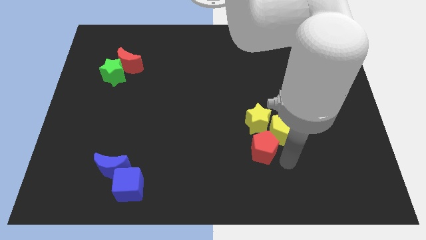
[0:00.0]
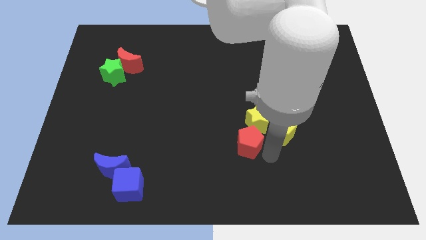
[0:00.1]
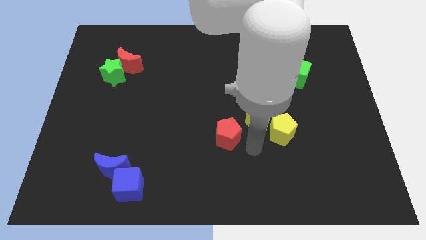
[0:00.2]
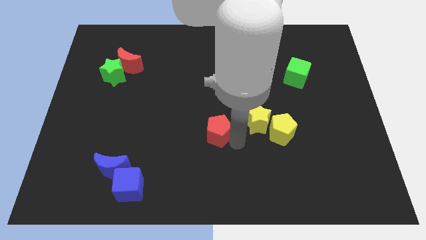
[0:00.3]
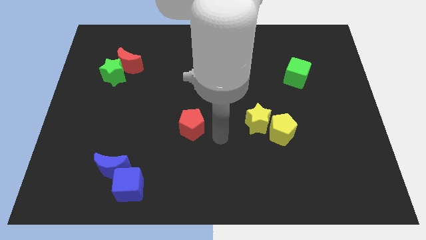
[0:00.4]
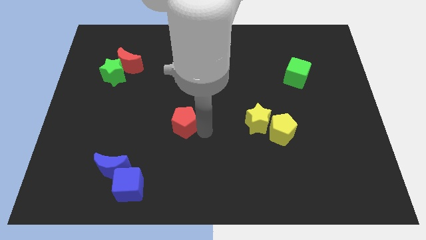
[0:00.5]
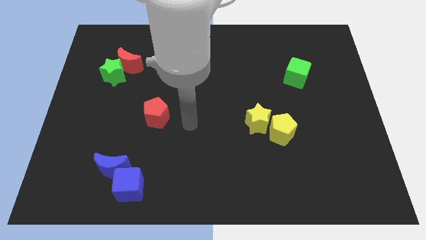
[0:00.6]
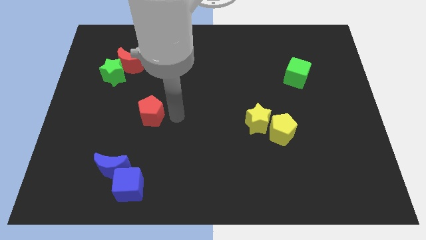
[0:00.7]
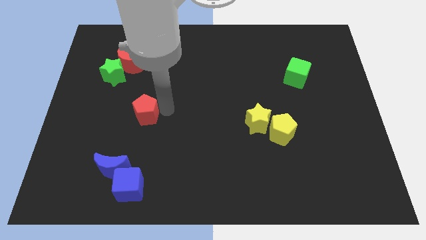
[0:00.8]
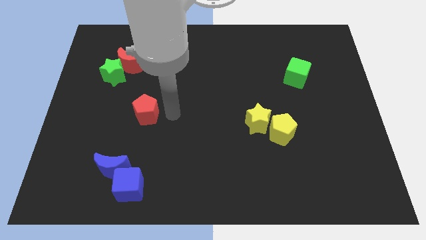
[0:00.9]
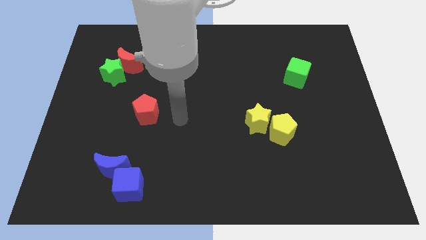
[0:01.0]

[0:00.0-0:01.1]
push the red pentagon towards the left side of the board

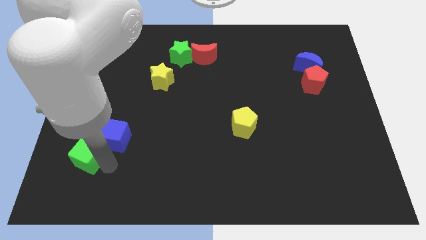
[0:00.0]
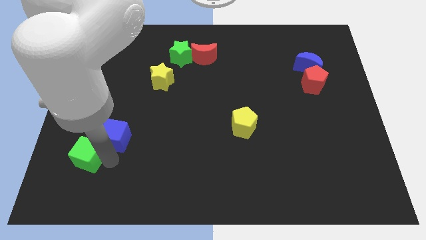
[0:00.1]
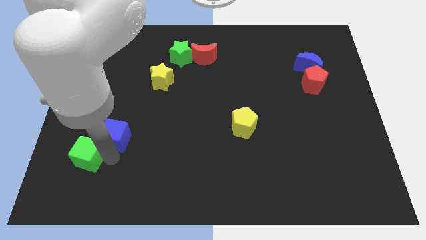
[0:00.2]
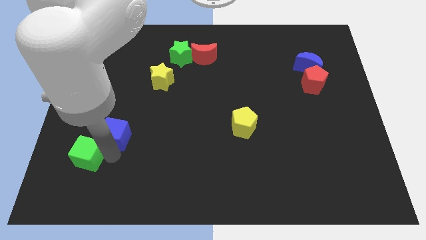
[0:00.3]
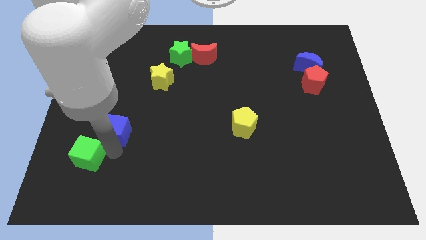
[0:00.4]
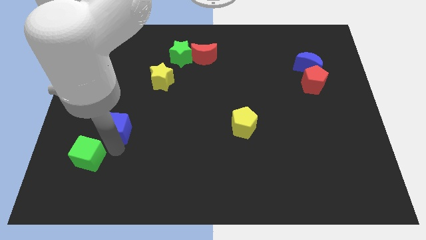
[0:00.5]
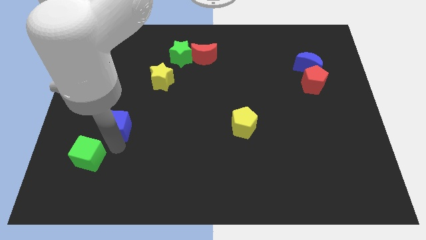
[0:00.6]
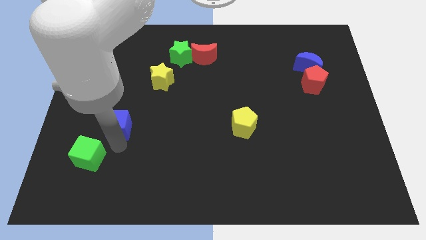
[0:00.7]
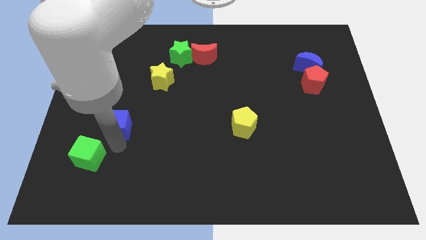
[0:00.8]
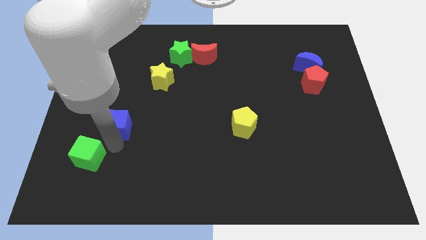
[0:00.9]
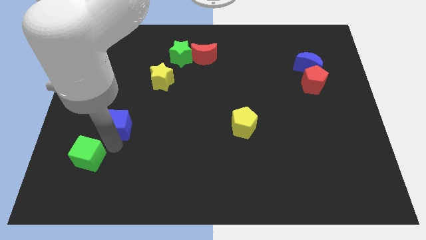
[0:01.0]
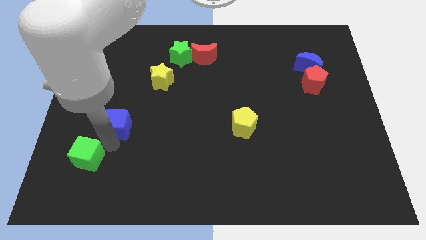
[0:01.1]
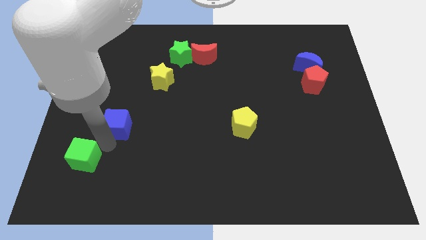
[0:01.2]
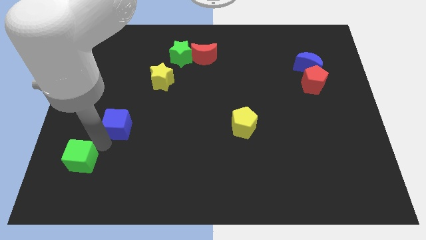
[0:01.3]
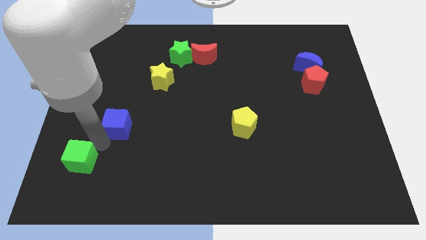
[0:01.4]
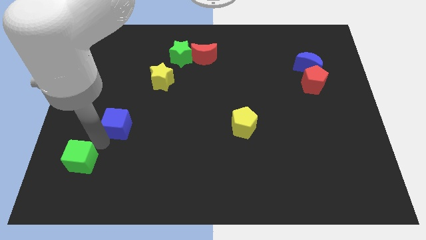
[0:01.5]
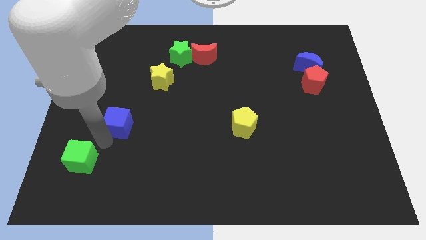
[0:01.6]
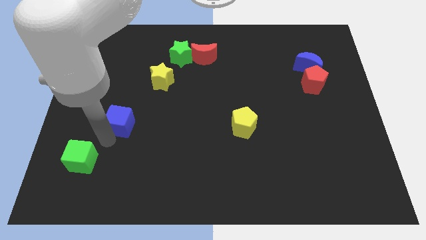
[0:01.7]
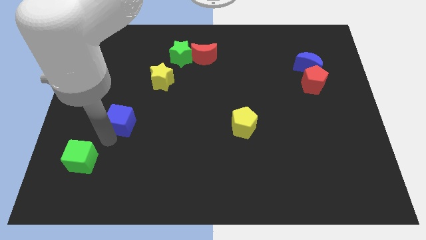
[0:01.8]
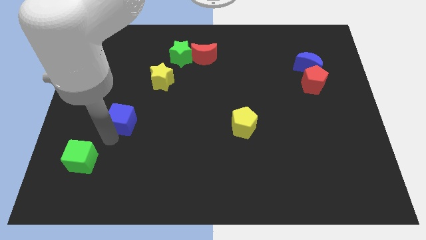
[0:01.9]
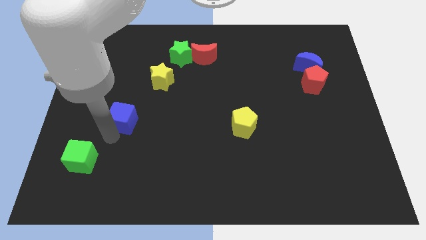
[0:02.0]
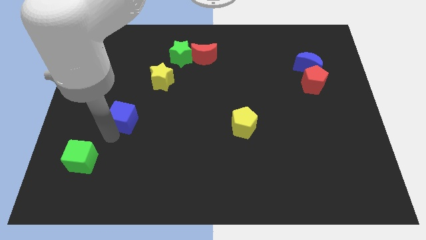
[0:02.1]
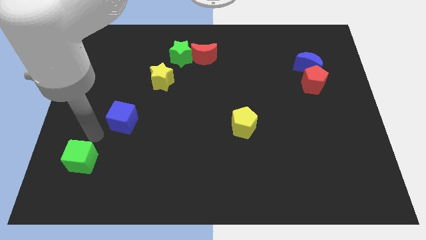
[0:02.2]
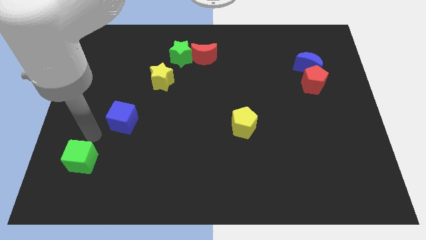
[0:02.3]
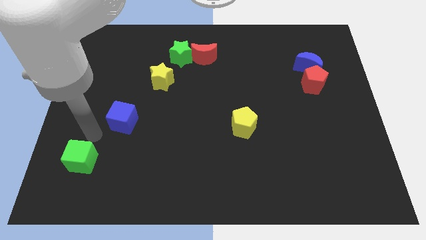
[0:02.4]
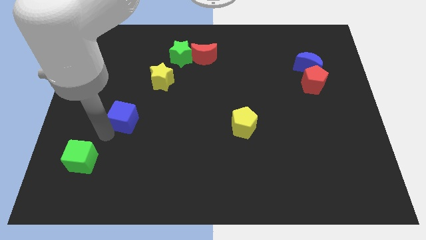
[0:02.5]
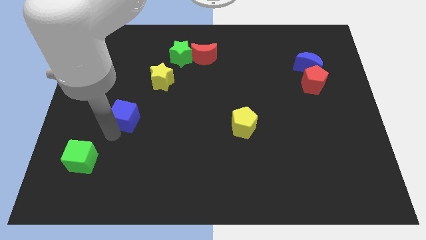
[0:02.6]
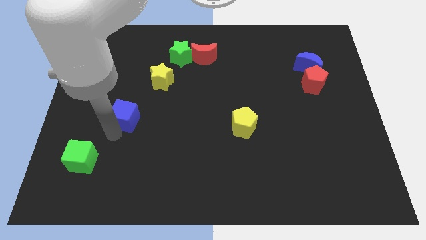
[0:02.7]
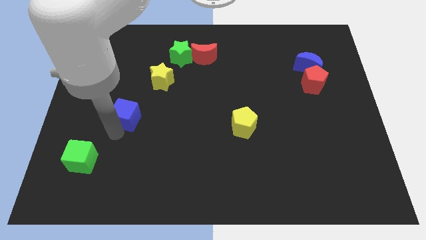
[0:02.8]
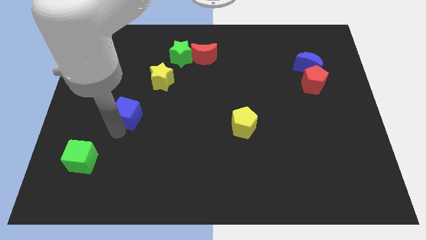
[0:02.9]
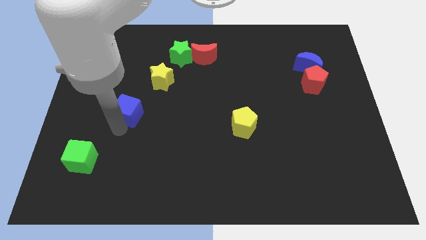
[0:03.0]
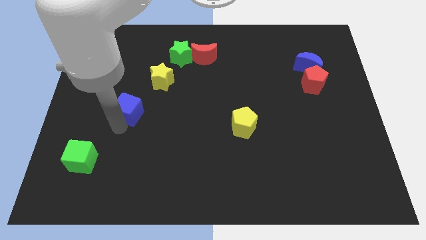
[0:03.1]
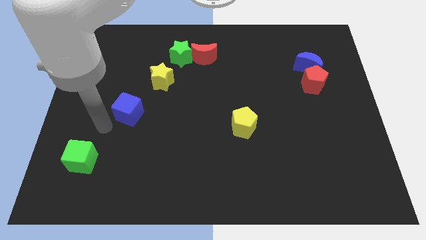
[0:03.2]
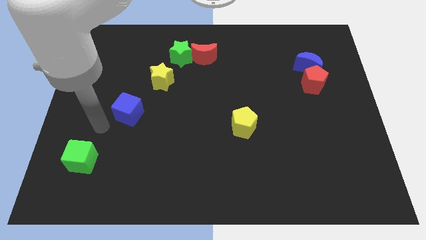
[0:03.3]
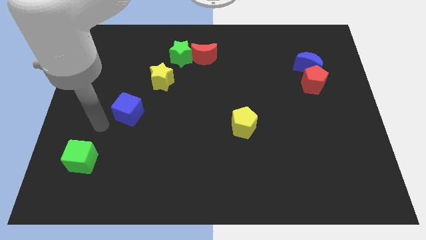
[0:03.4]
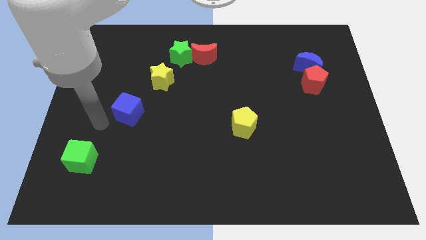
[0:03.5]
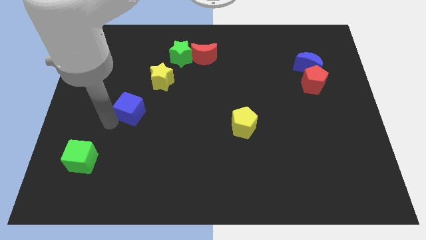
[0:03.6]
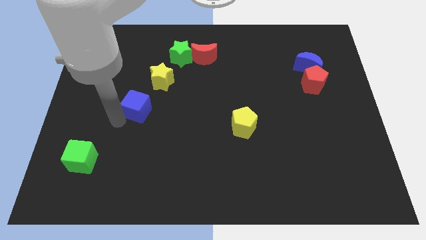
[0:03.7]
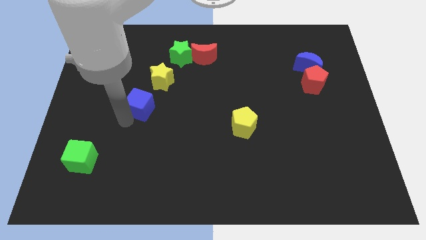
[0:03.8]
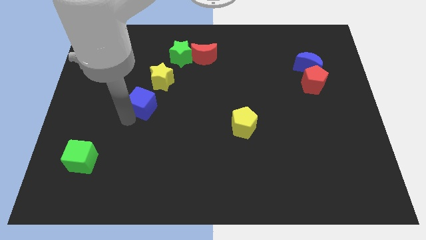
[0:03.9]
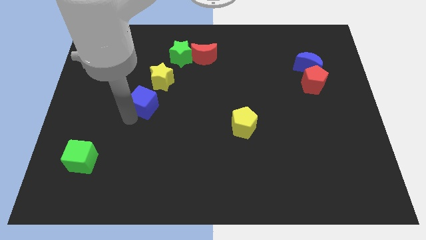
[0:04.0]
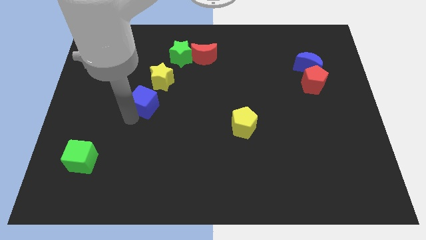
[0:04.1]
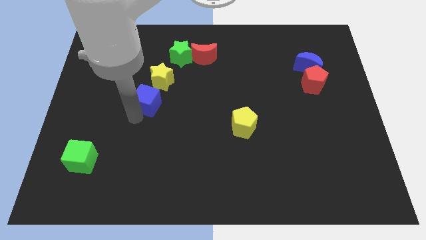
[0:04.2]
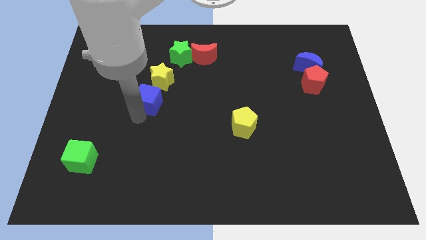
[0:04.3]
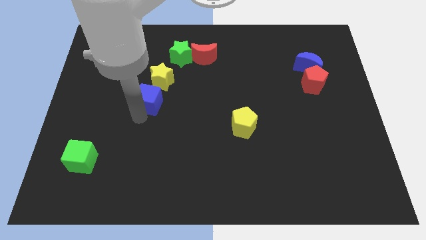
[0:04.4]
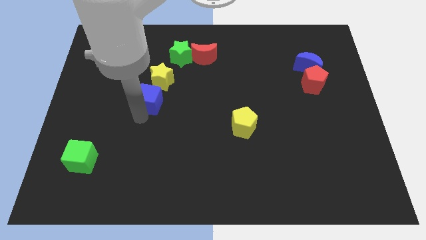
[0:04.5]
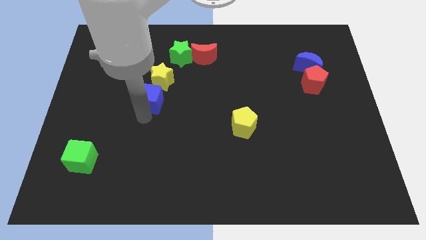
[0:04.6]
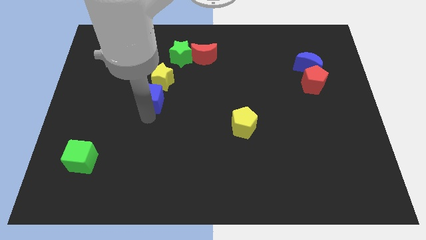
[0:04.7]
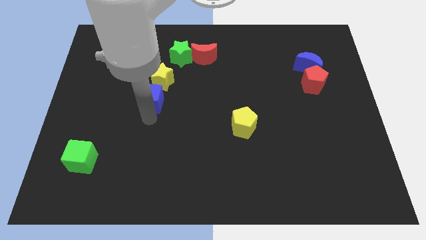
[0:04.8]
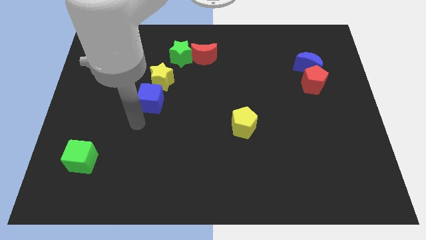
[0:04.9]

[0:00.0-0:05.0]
push the blue cube below the yellow star

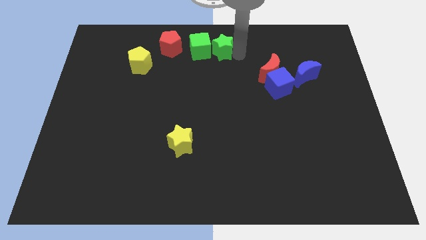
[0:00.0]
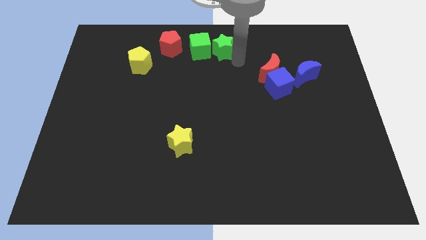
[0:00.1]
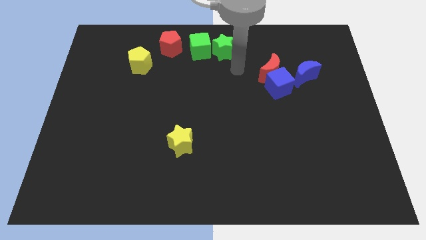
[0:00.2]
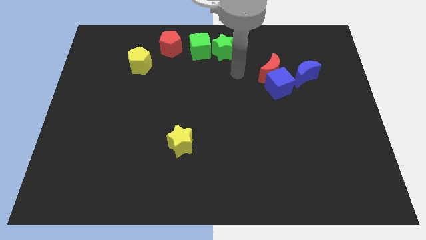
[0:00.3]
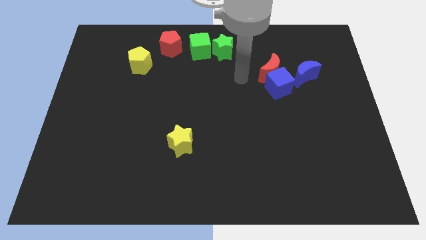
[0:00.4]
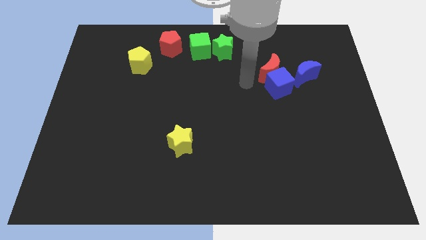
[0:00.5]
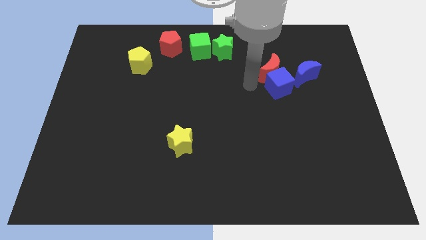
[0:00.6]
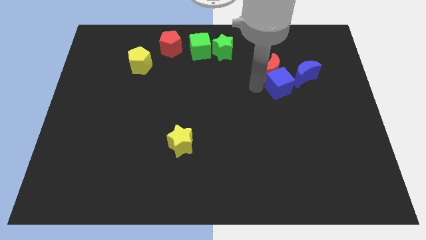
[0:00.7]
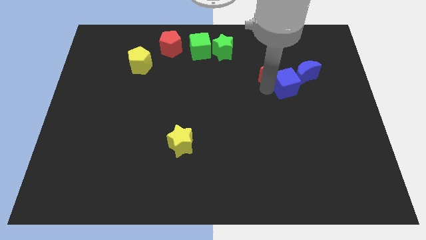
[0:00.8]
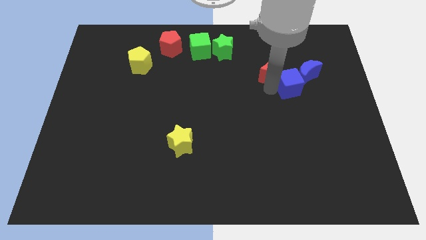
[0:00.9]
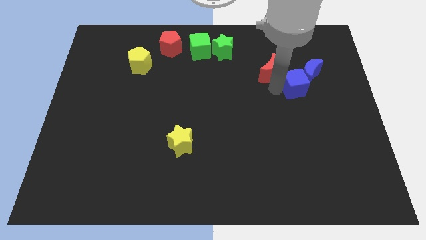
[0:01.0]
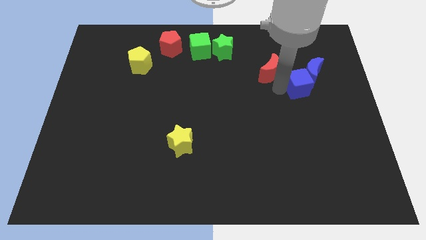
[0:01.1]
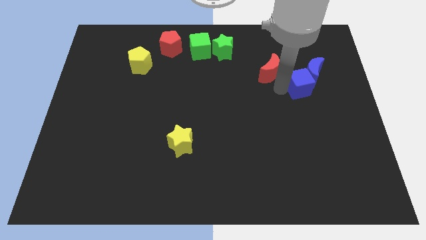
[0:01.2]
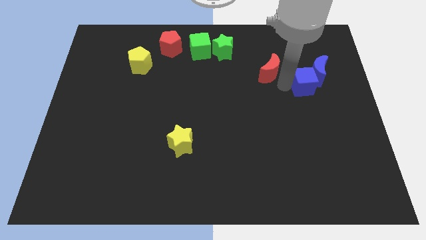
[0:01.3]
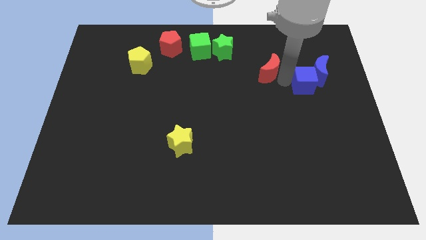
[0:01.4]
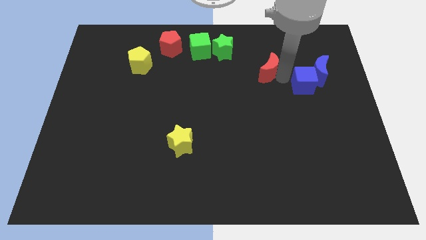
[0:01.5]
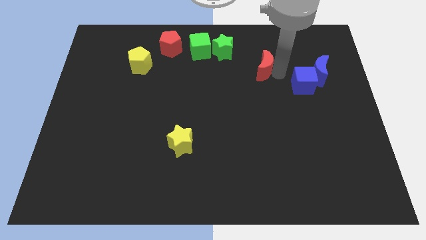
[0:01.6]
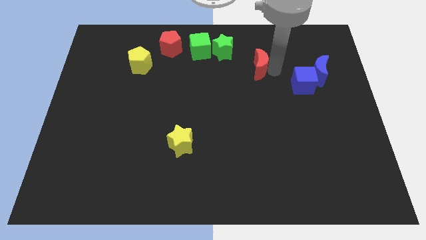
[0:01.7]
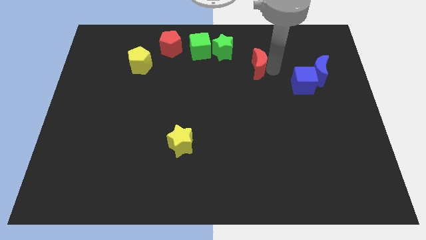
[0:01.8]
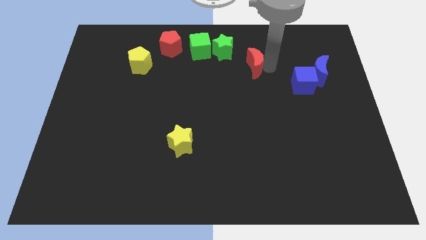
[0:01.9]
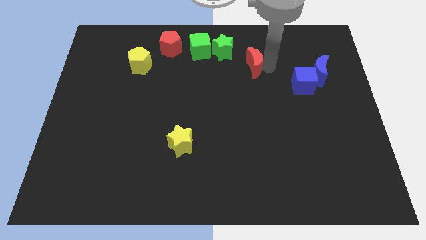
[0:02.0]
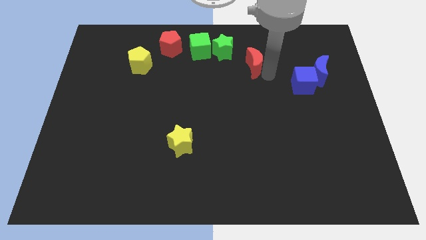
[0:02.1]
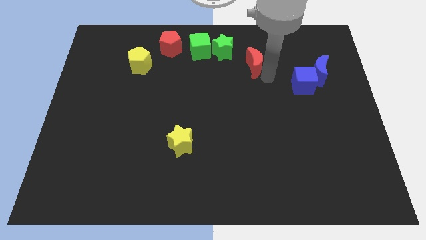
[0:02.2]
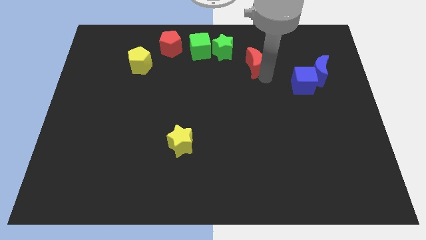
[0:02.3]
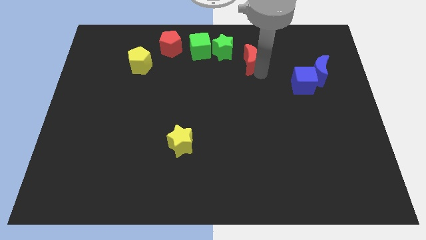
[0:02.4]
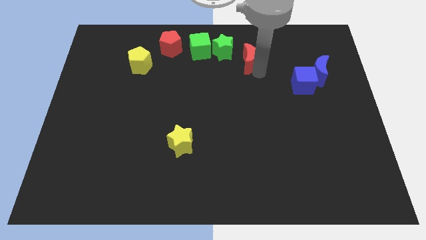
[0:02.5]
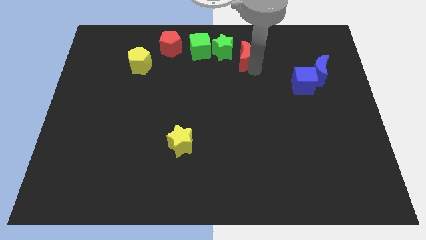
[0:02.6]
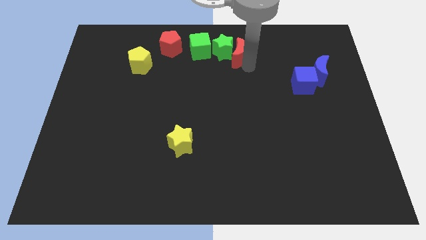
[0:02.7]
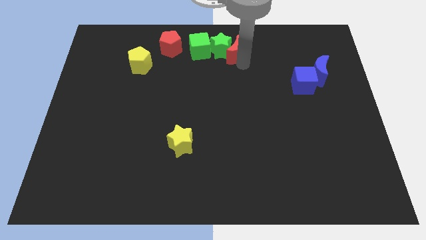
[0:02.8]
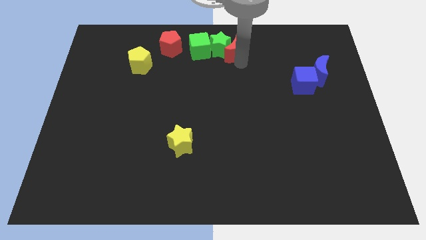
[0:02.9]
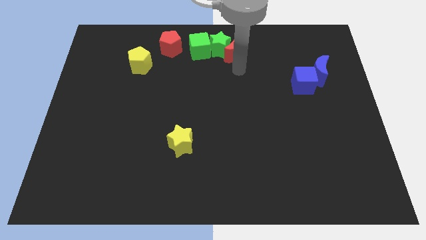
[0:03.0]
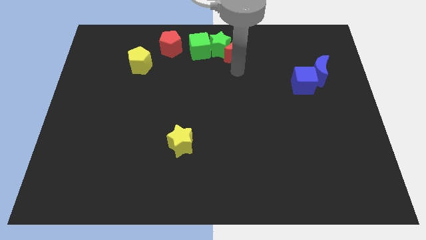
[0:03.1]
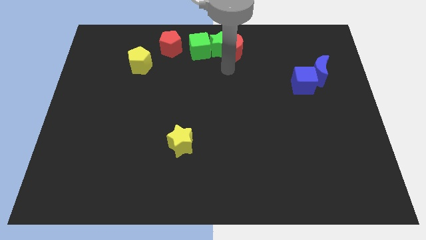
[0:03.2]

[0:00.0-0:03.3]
separate red moon from the blue blocks
